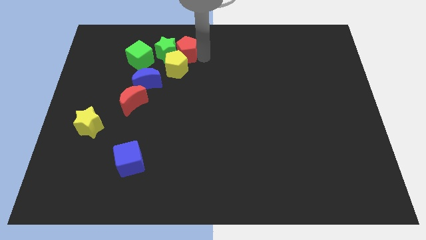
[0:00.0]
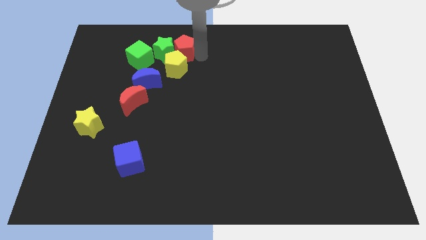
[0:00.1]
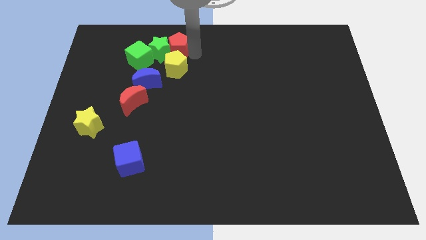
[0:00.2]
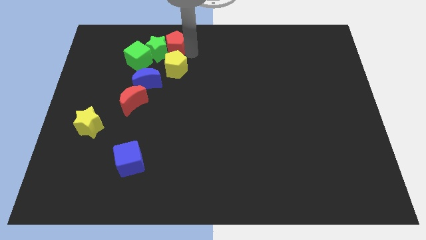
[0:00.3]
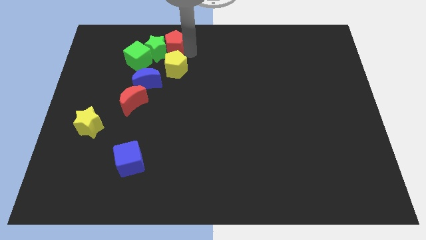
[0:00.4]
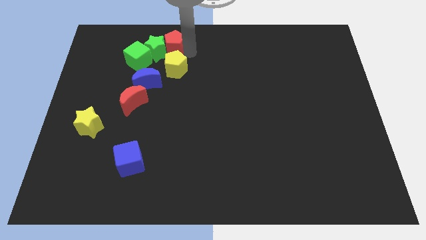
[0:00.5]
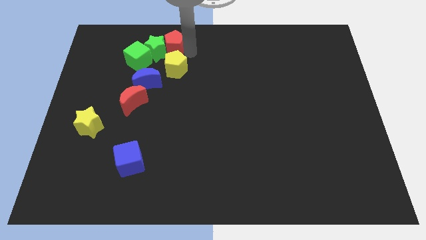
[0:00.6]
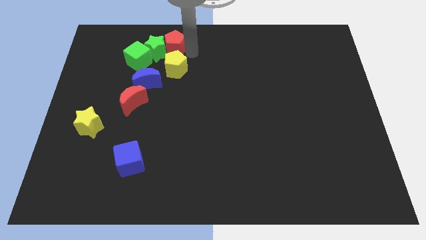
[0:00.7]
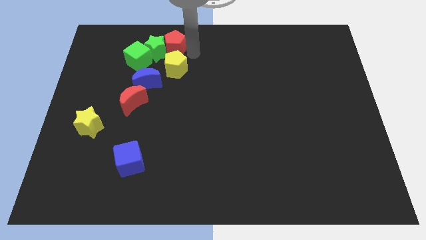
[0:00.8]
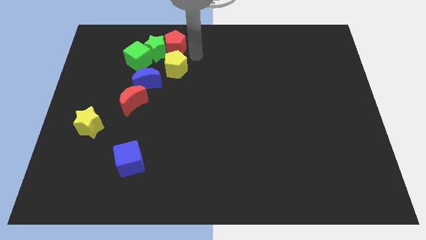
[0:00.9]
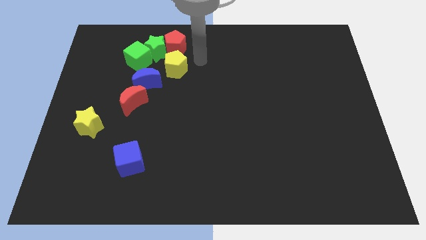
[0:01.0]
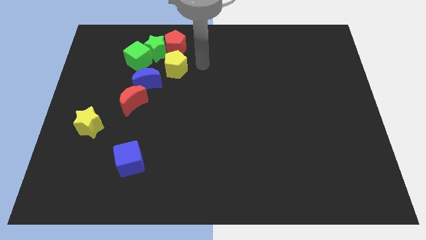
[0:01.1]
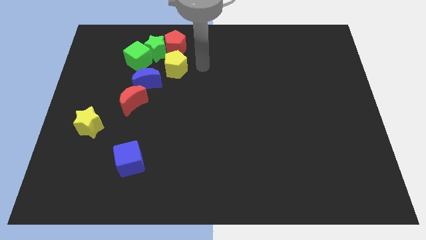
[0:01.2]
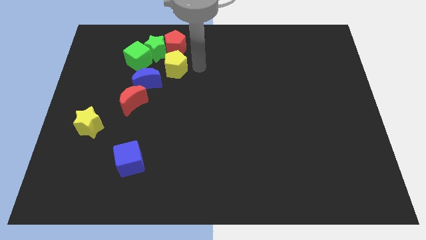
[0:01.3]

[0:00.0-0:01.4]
move the red pentagon into the right of the green star

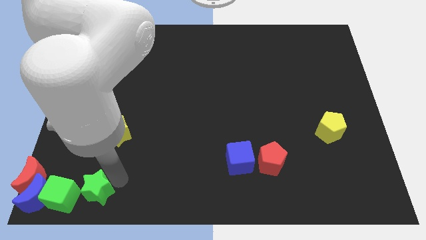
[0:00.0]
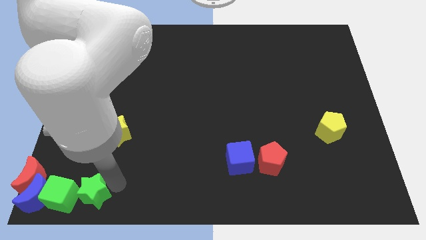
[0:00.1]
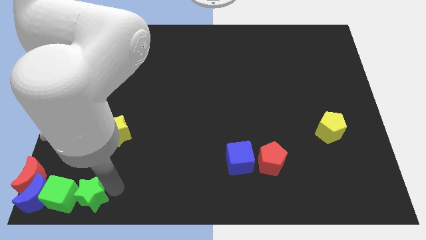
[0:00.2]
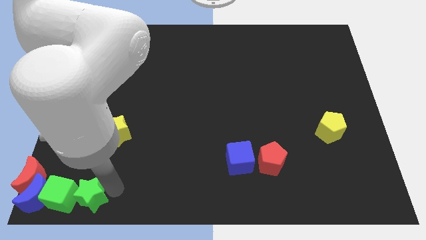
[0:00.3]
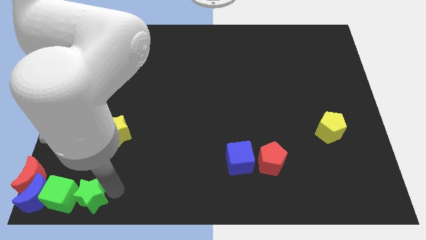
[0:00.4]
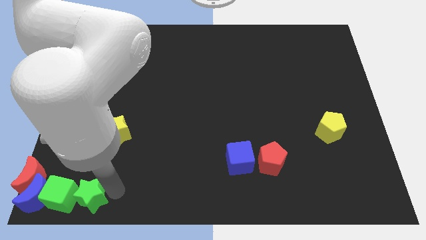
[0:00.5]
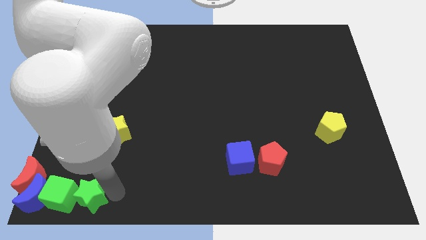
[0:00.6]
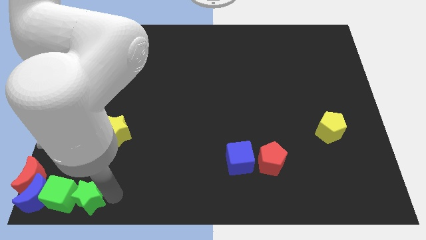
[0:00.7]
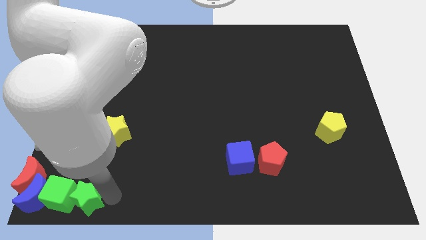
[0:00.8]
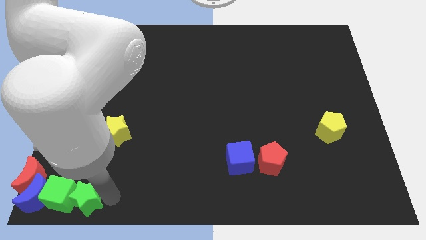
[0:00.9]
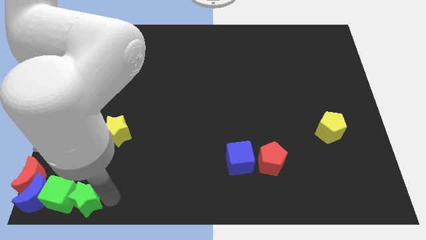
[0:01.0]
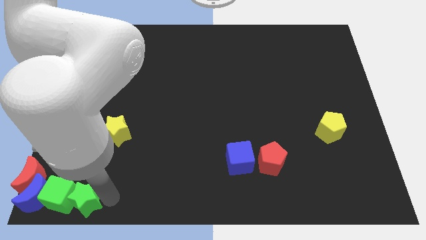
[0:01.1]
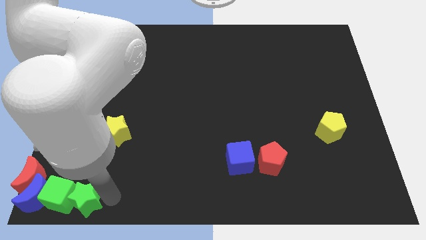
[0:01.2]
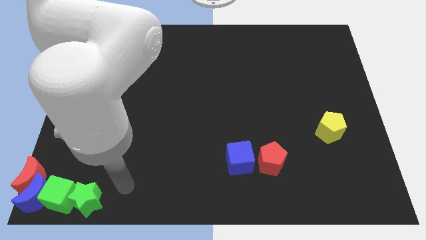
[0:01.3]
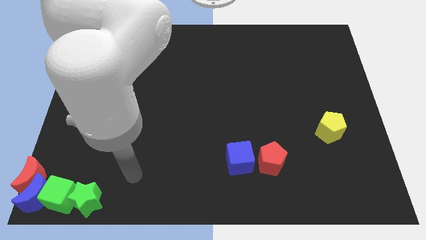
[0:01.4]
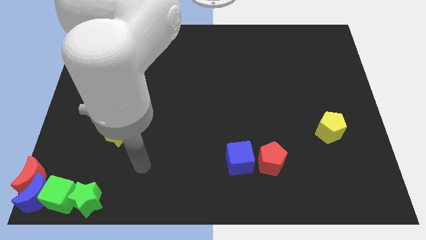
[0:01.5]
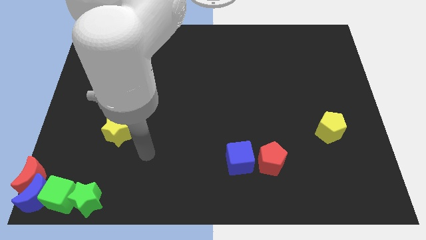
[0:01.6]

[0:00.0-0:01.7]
move the green star to the right of the green cube

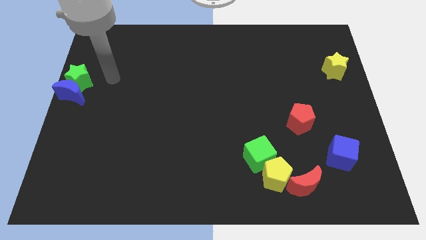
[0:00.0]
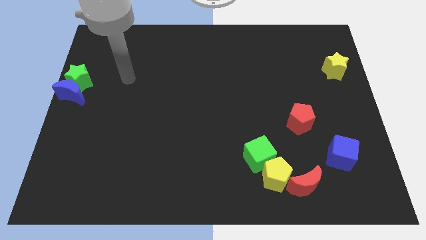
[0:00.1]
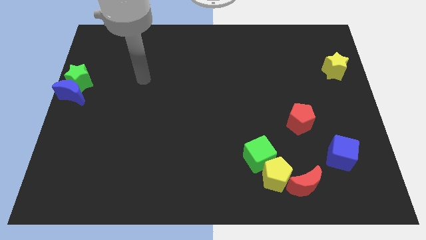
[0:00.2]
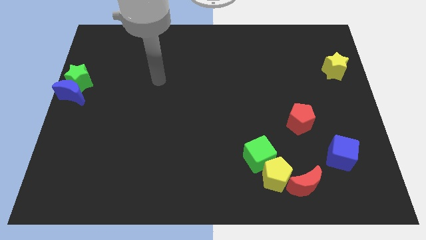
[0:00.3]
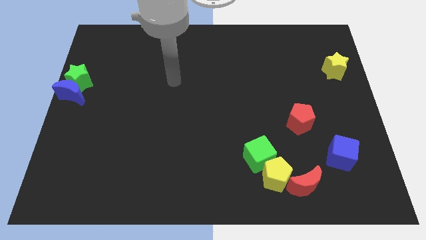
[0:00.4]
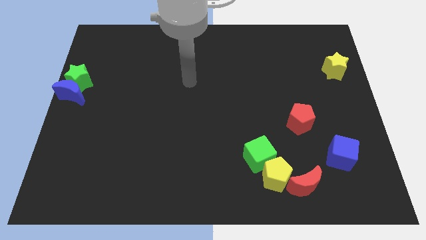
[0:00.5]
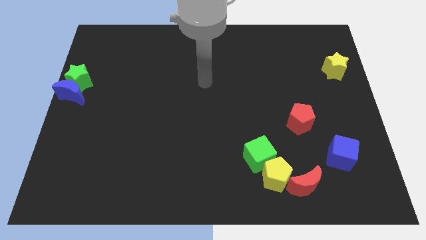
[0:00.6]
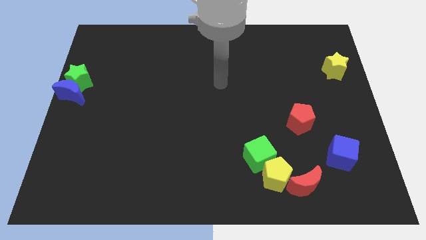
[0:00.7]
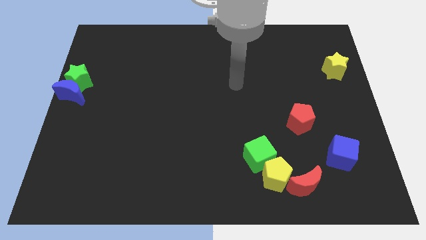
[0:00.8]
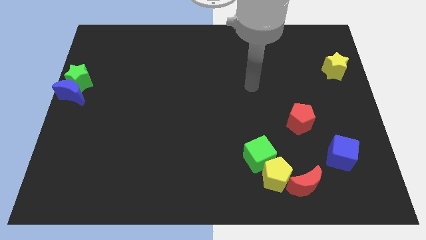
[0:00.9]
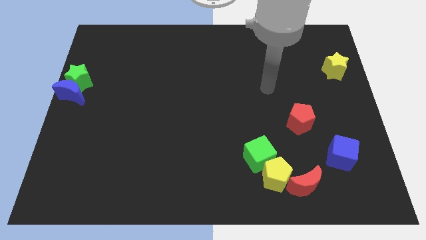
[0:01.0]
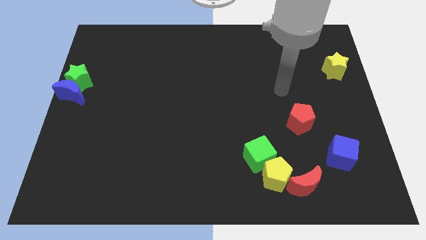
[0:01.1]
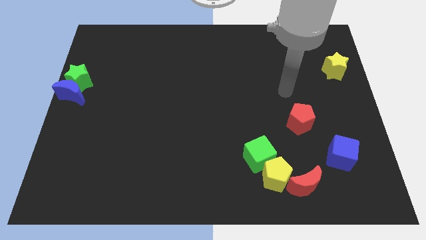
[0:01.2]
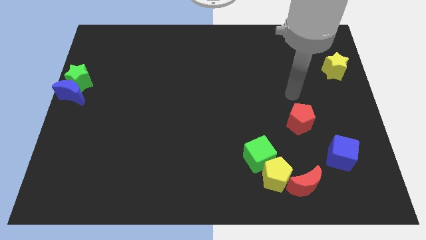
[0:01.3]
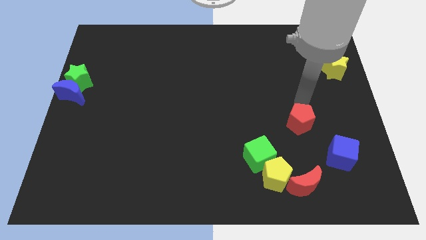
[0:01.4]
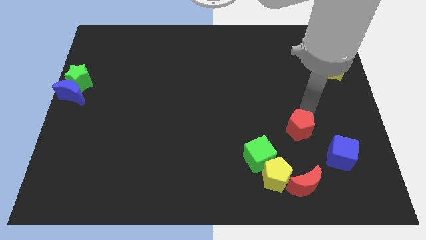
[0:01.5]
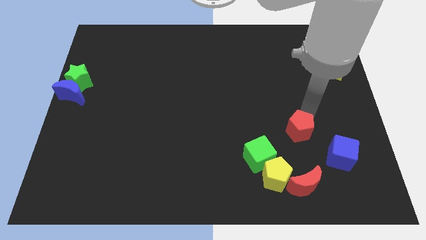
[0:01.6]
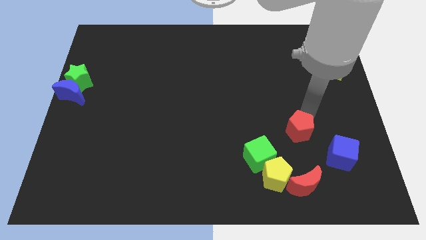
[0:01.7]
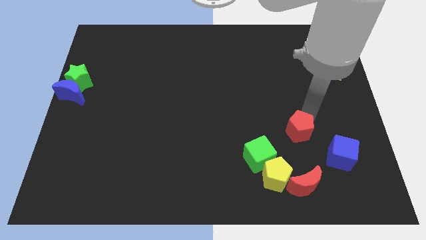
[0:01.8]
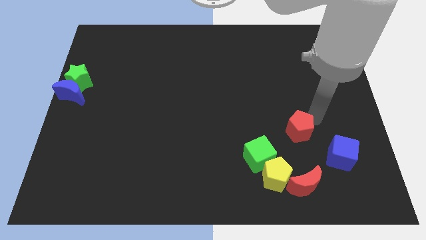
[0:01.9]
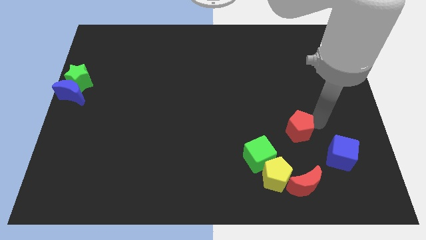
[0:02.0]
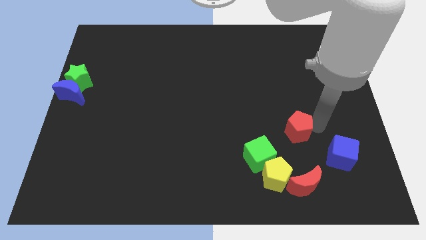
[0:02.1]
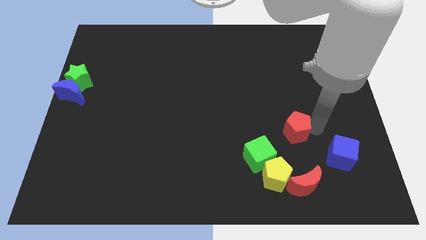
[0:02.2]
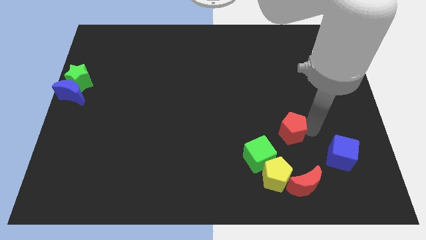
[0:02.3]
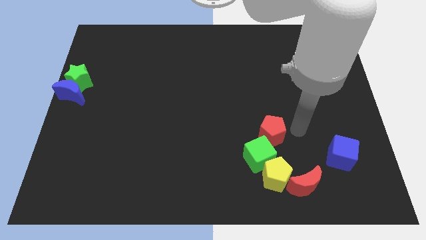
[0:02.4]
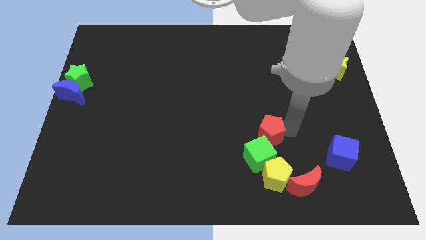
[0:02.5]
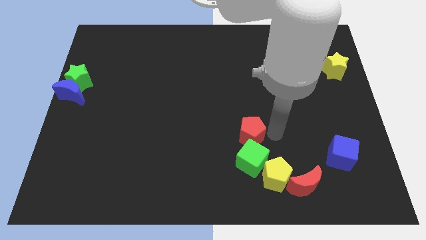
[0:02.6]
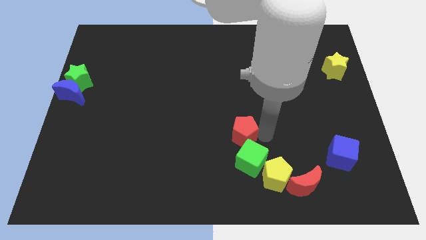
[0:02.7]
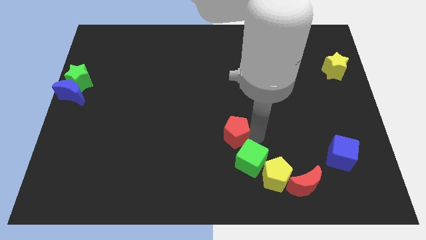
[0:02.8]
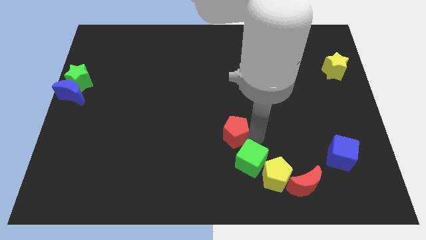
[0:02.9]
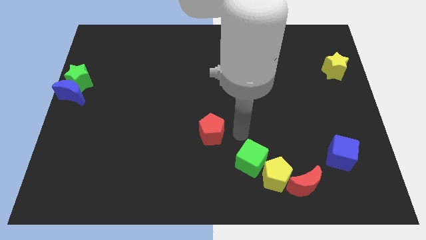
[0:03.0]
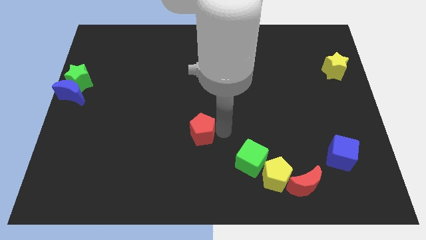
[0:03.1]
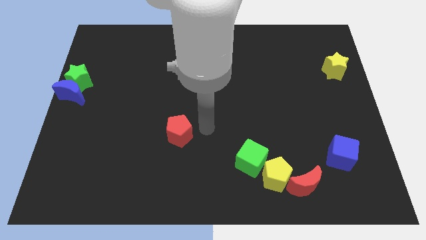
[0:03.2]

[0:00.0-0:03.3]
push the red pentagon to the center towards the left side

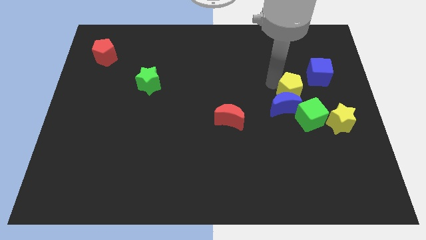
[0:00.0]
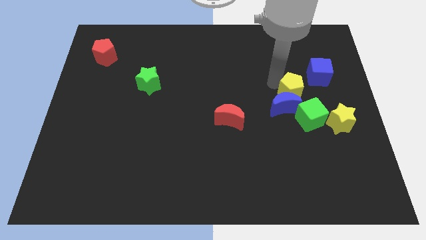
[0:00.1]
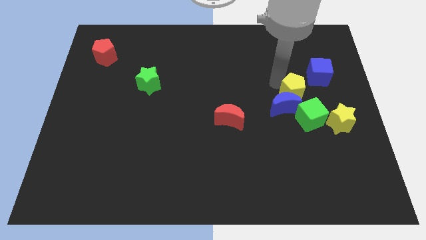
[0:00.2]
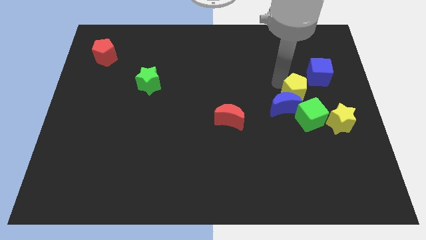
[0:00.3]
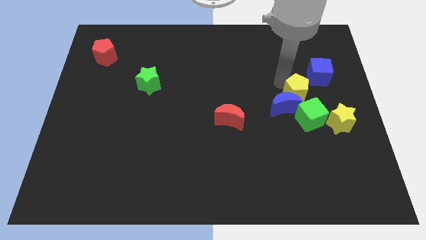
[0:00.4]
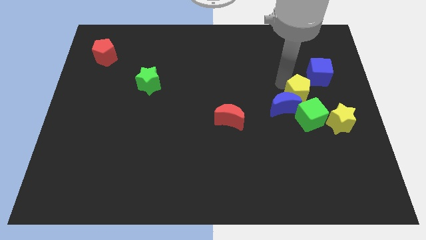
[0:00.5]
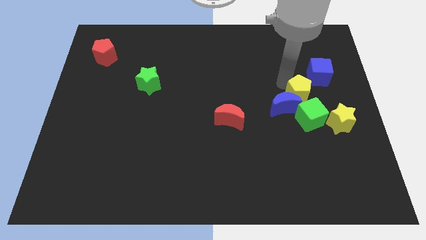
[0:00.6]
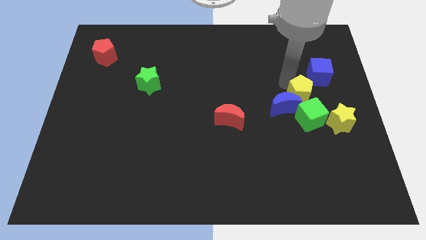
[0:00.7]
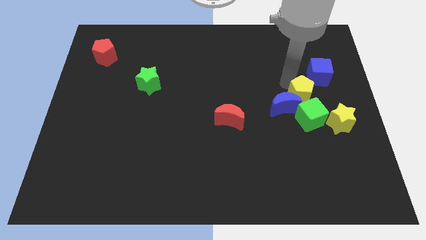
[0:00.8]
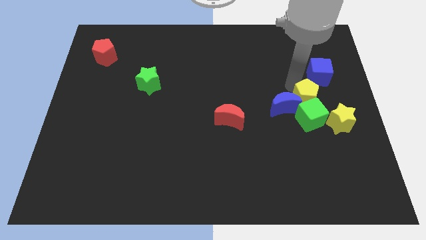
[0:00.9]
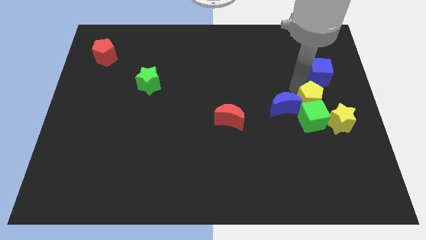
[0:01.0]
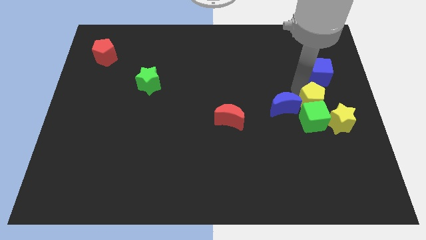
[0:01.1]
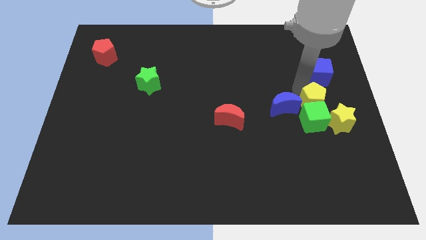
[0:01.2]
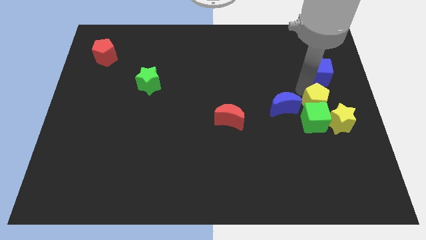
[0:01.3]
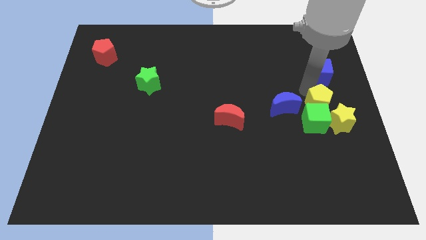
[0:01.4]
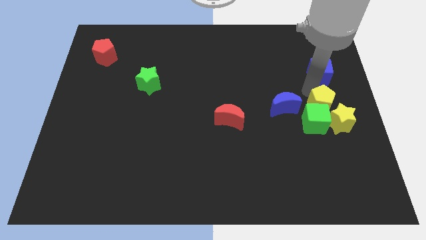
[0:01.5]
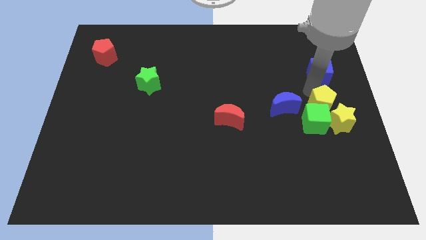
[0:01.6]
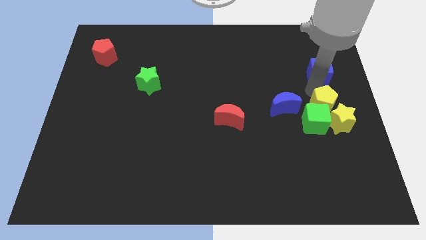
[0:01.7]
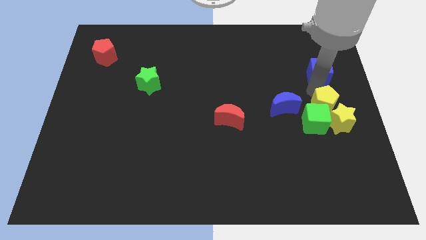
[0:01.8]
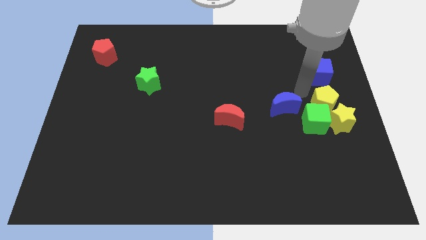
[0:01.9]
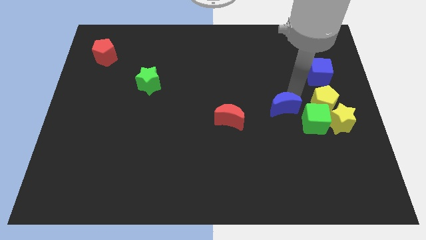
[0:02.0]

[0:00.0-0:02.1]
move the yellow pentagon close to the yellow star

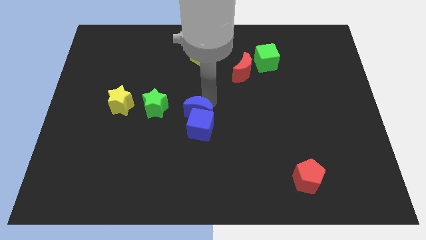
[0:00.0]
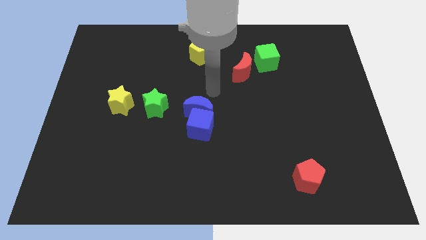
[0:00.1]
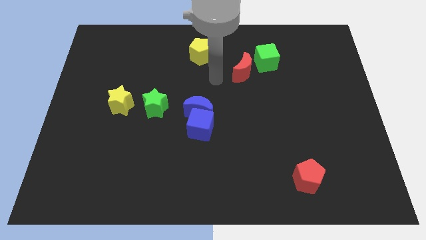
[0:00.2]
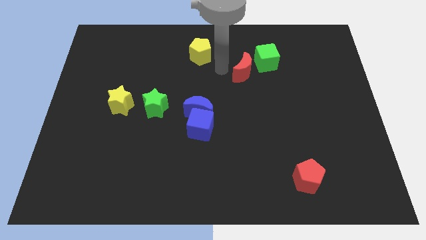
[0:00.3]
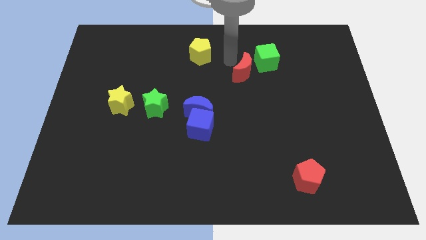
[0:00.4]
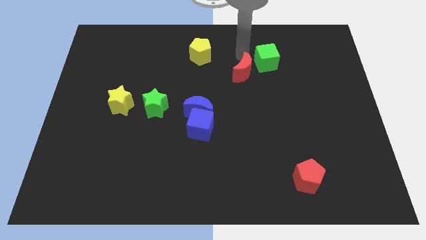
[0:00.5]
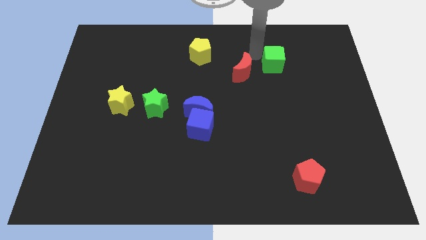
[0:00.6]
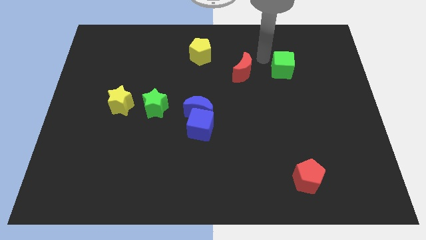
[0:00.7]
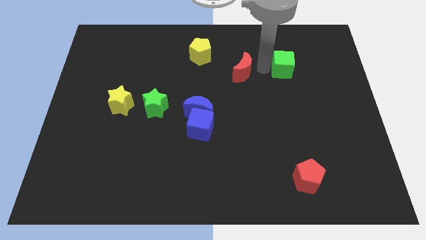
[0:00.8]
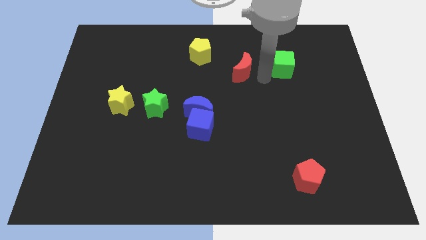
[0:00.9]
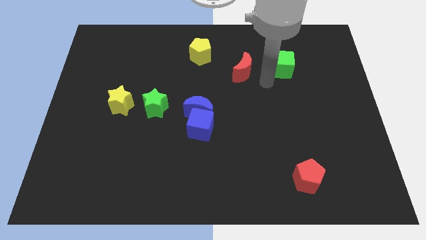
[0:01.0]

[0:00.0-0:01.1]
slide the green cube slightly to the right side
